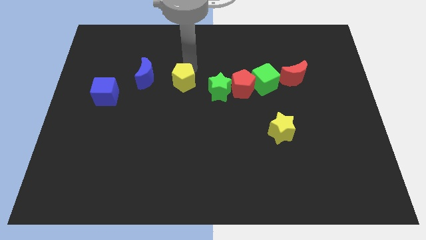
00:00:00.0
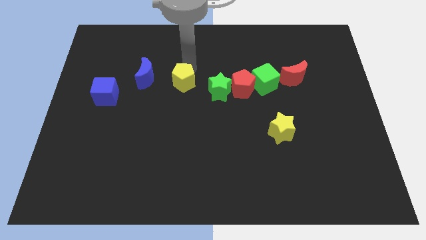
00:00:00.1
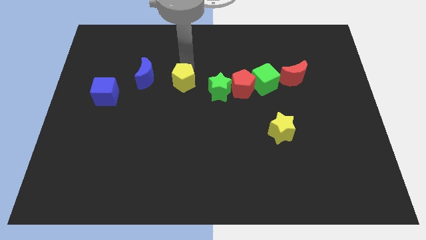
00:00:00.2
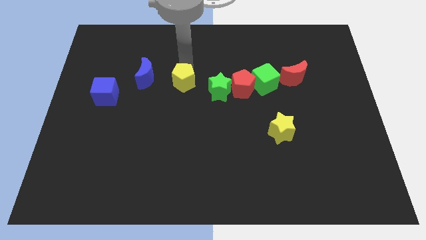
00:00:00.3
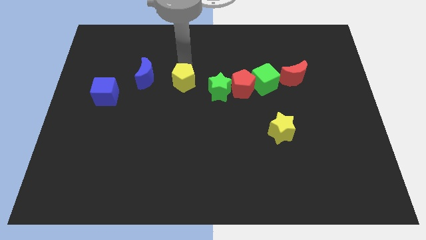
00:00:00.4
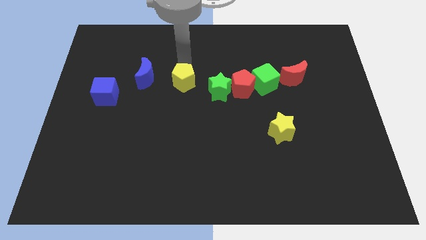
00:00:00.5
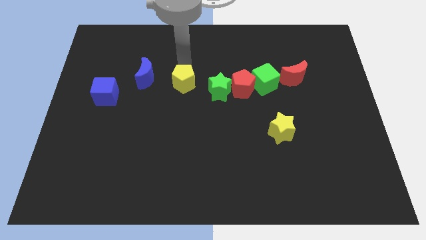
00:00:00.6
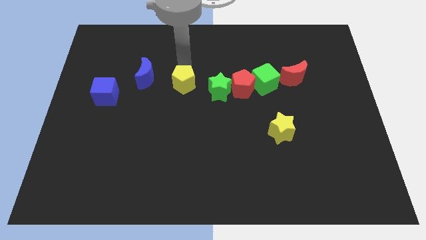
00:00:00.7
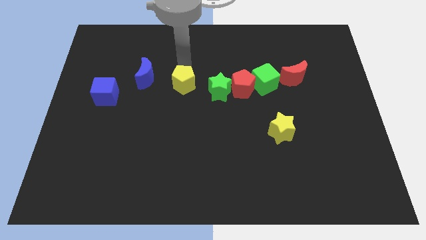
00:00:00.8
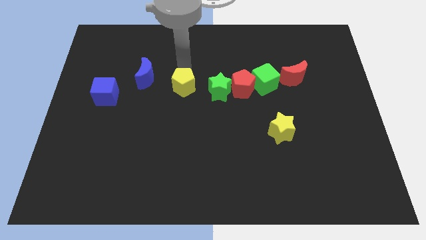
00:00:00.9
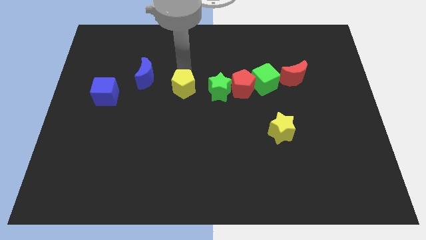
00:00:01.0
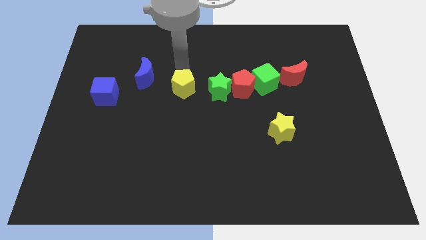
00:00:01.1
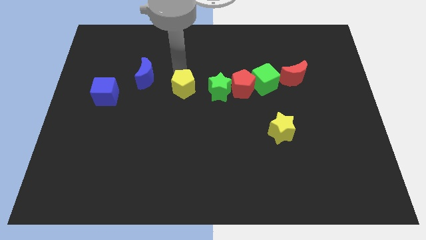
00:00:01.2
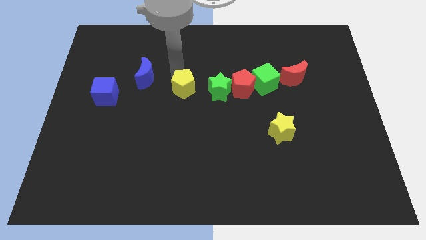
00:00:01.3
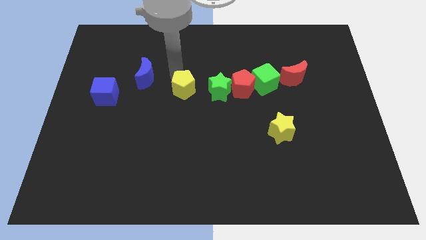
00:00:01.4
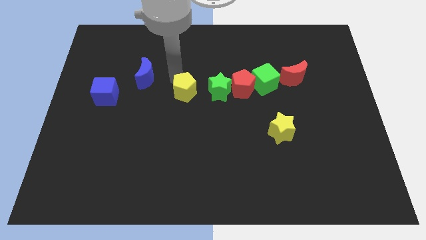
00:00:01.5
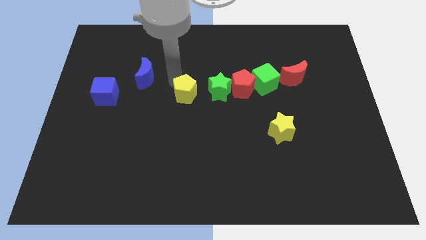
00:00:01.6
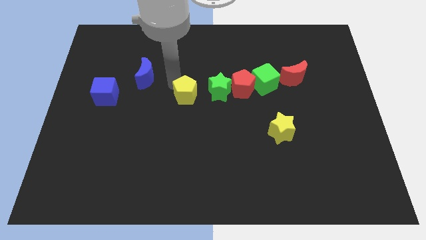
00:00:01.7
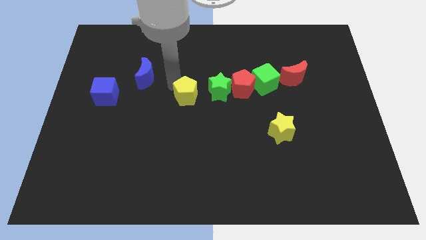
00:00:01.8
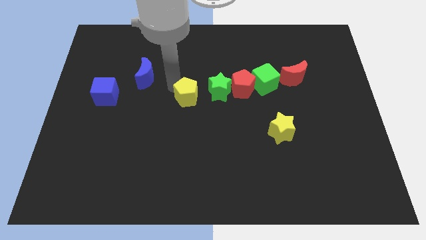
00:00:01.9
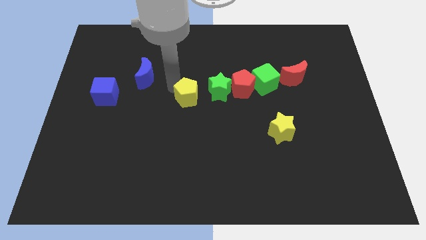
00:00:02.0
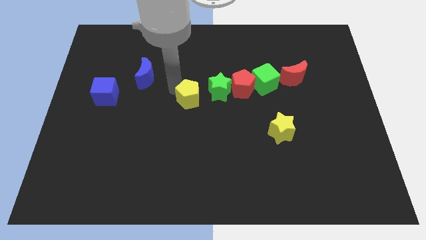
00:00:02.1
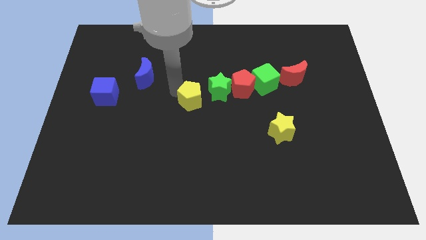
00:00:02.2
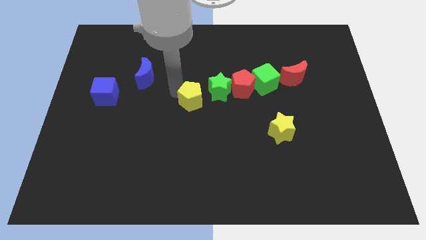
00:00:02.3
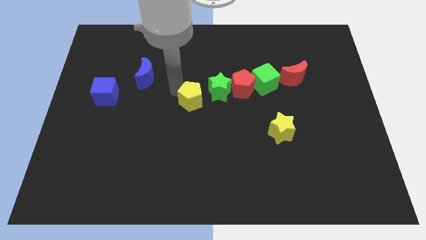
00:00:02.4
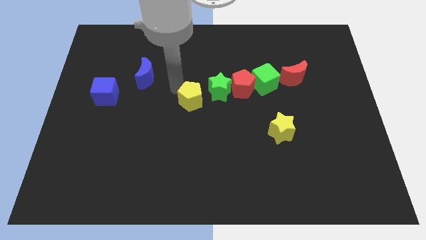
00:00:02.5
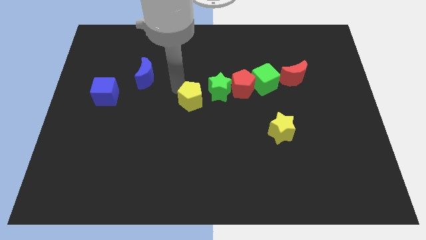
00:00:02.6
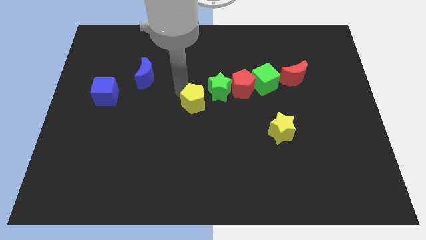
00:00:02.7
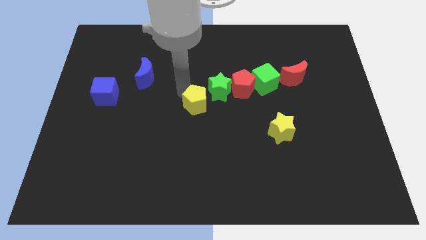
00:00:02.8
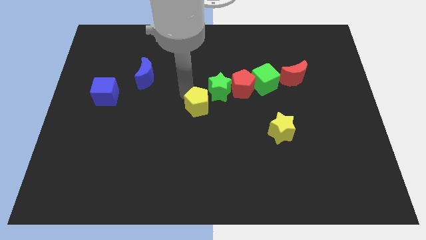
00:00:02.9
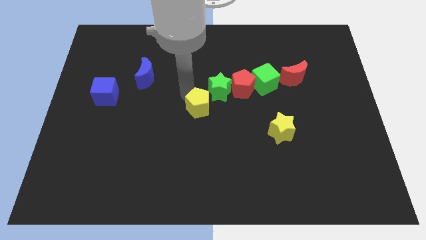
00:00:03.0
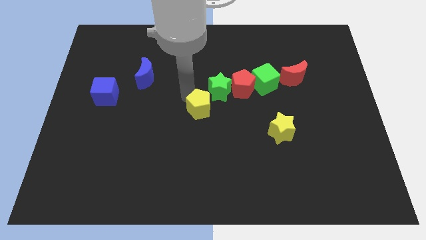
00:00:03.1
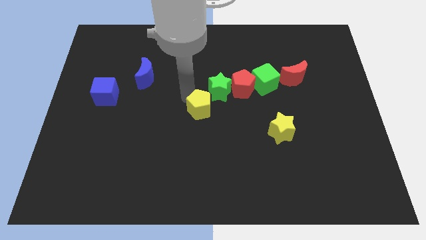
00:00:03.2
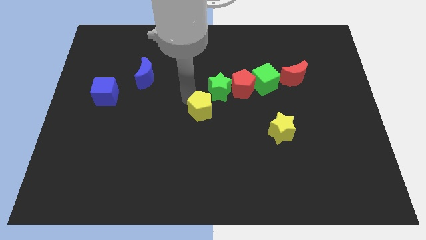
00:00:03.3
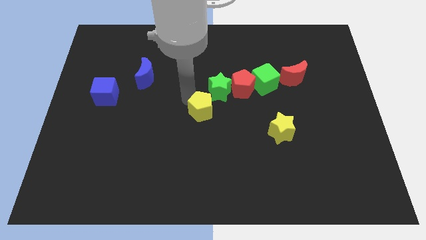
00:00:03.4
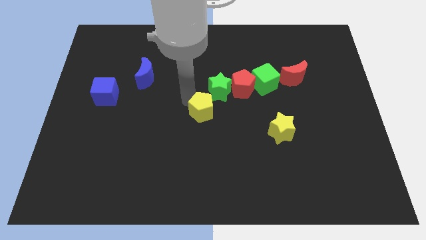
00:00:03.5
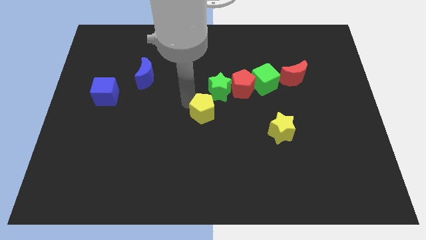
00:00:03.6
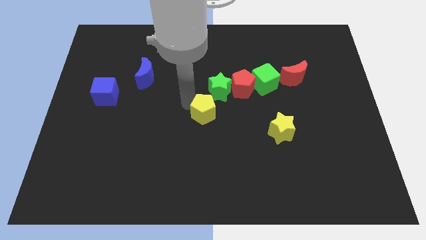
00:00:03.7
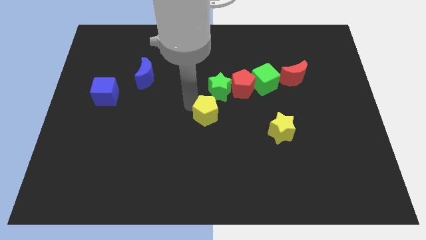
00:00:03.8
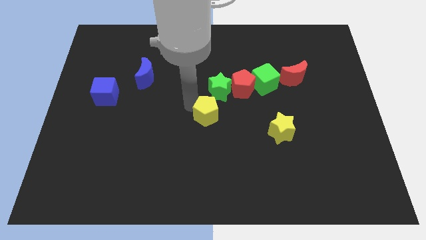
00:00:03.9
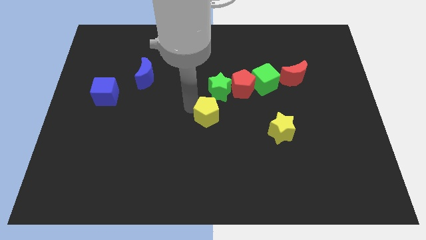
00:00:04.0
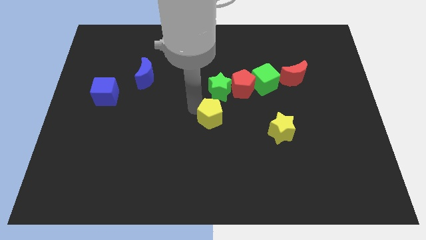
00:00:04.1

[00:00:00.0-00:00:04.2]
move the yellow pentagon away from the diagonal line

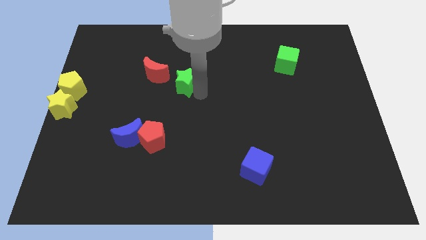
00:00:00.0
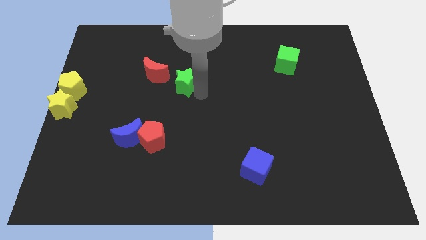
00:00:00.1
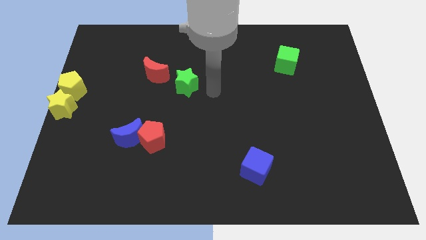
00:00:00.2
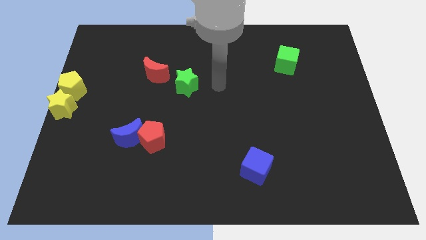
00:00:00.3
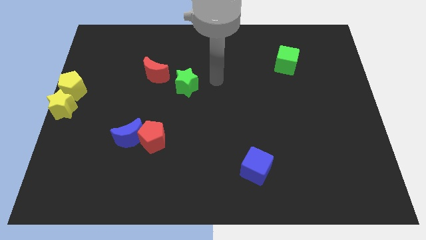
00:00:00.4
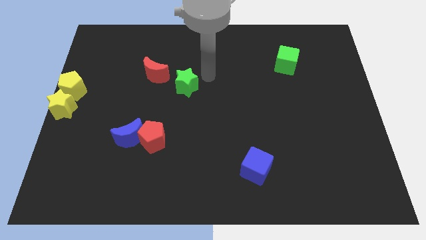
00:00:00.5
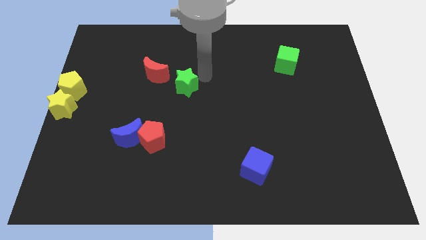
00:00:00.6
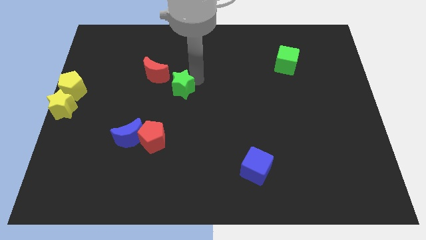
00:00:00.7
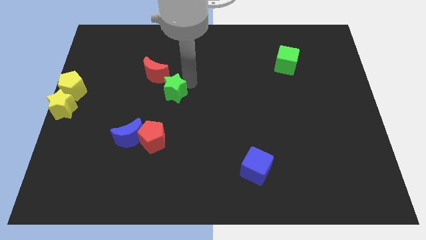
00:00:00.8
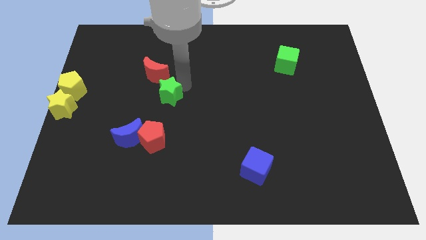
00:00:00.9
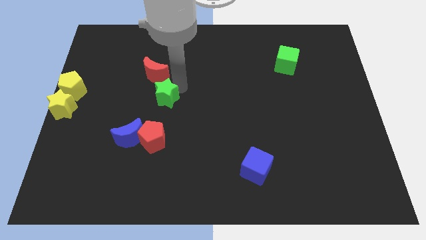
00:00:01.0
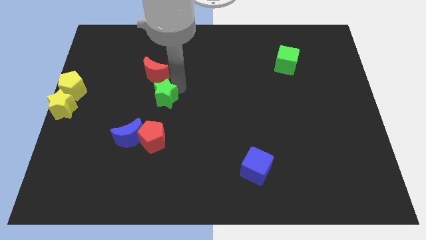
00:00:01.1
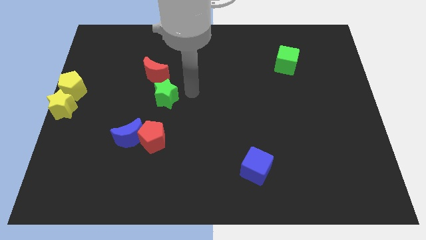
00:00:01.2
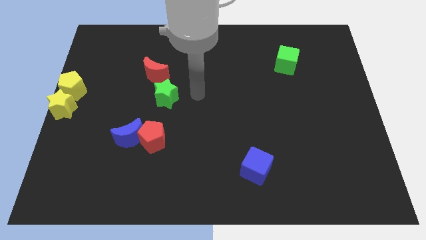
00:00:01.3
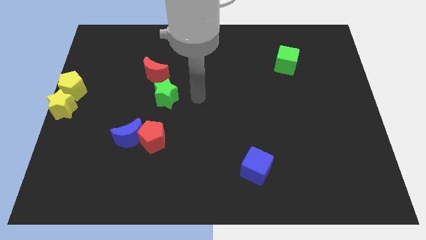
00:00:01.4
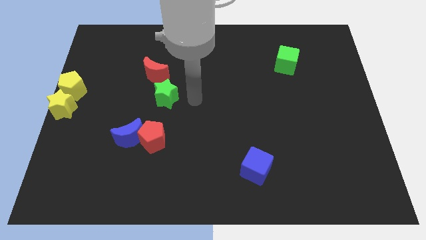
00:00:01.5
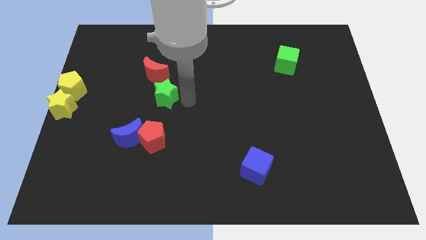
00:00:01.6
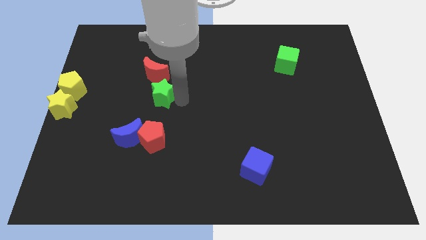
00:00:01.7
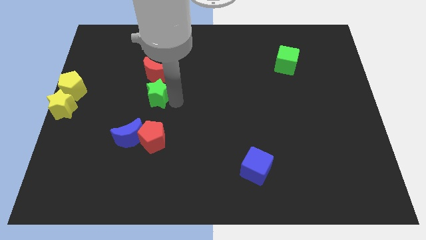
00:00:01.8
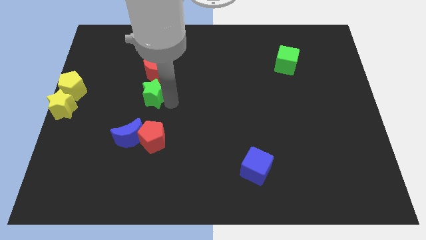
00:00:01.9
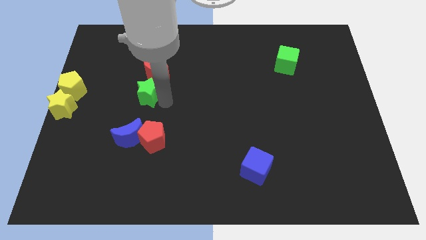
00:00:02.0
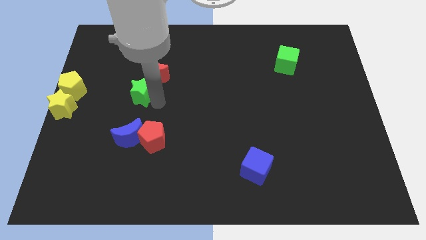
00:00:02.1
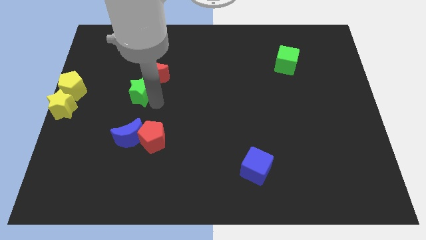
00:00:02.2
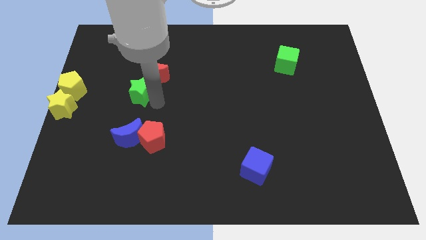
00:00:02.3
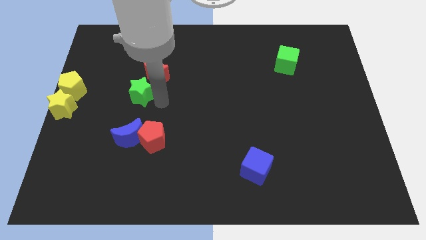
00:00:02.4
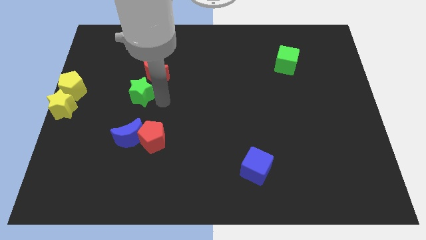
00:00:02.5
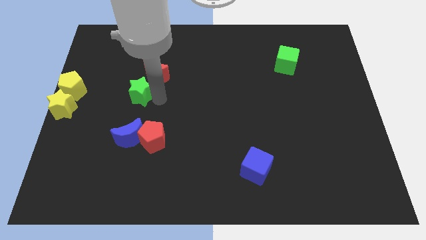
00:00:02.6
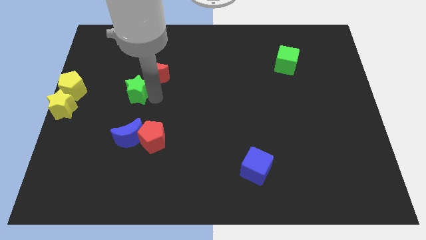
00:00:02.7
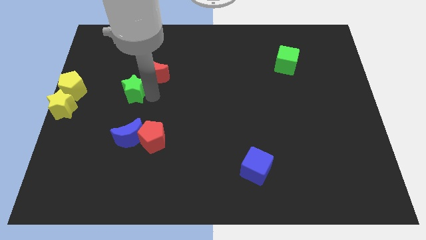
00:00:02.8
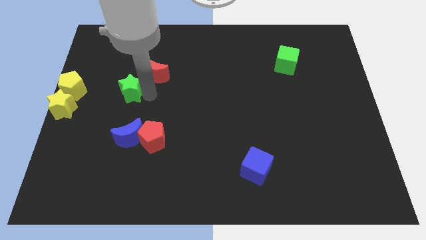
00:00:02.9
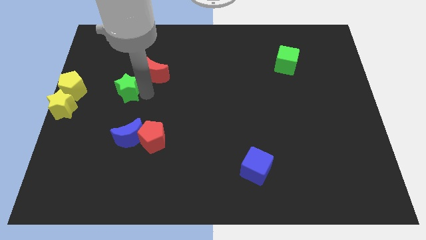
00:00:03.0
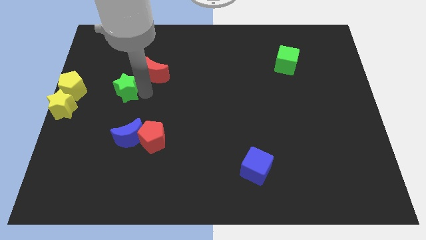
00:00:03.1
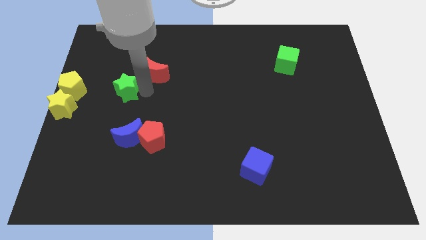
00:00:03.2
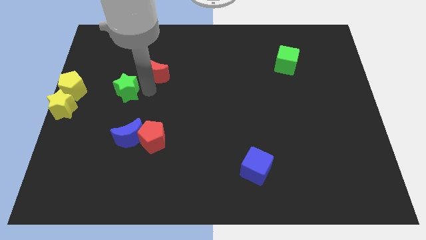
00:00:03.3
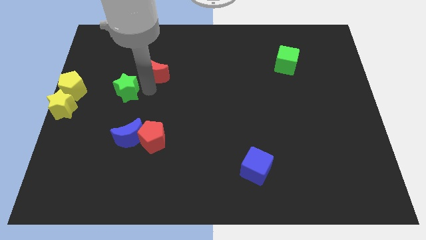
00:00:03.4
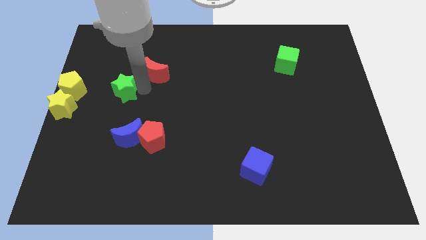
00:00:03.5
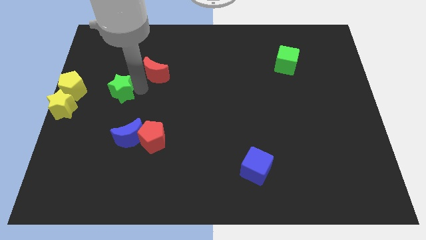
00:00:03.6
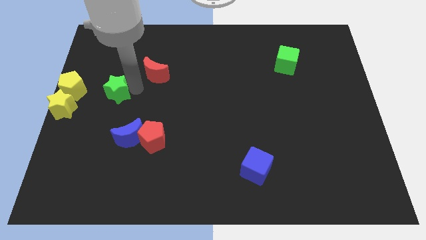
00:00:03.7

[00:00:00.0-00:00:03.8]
move the green star to the bottom left of the red crescent

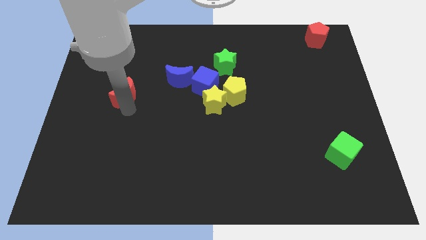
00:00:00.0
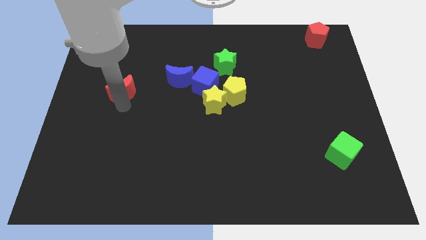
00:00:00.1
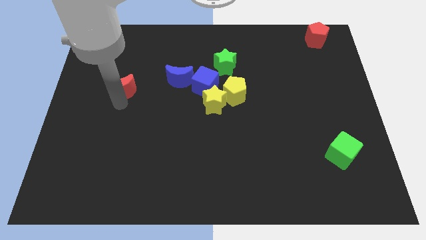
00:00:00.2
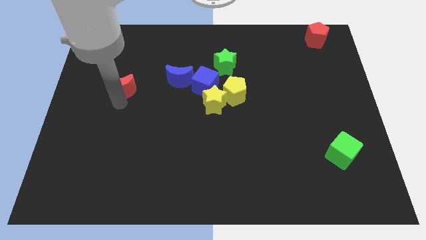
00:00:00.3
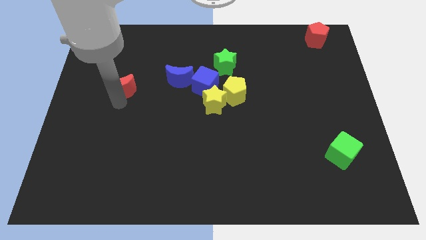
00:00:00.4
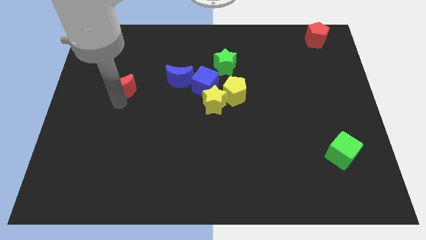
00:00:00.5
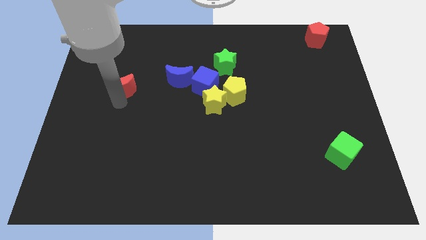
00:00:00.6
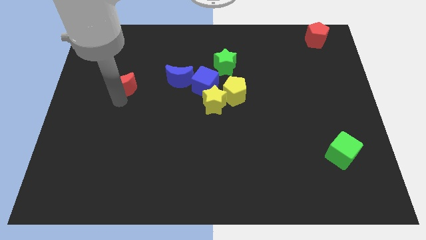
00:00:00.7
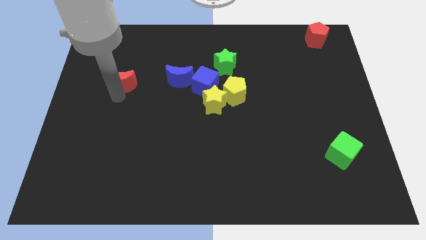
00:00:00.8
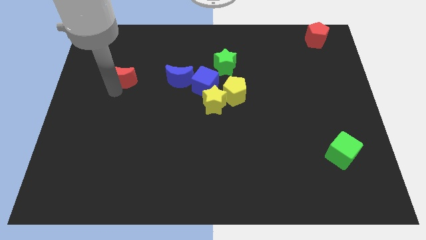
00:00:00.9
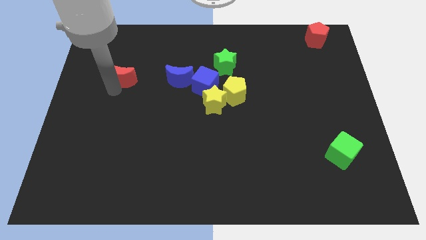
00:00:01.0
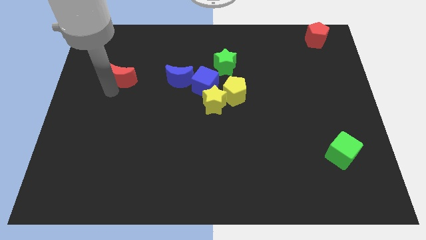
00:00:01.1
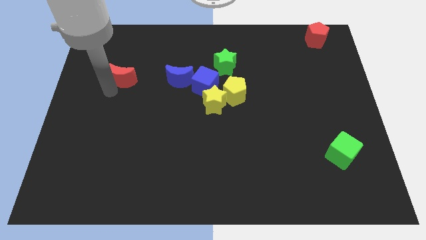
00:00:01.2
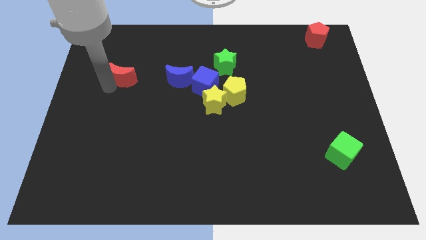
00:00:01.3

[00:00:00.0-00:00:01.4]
place the red moon left to the blue moon
